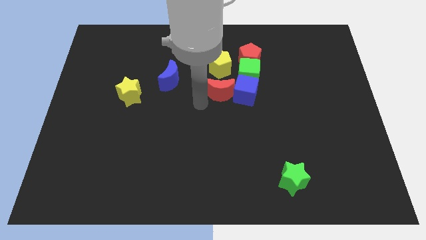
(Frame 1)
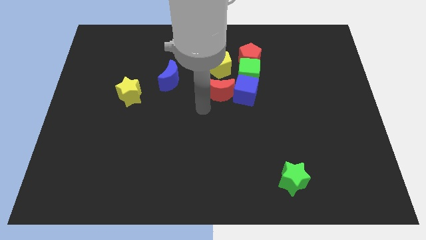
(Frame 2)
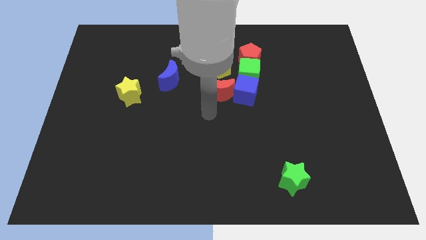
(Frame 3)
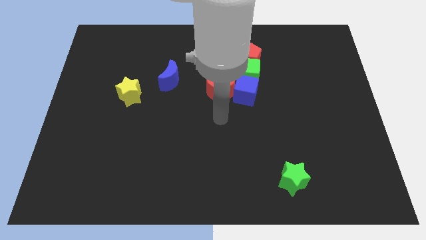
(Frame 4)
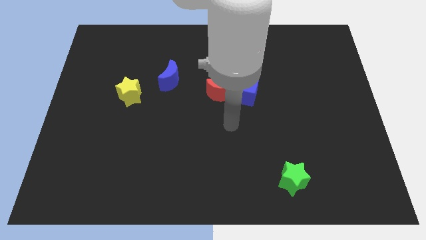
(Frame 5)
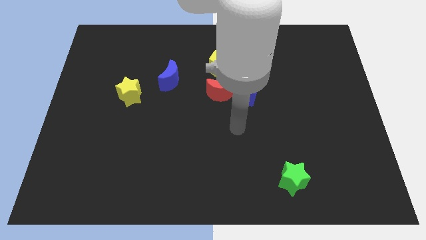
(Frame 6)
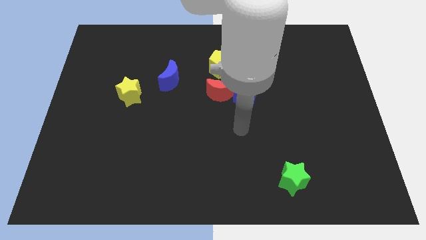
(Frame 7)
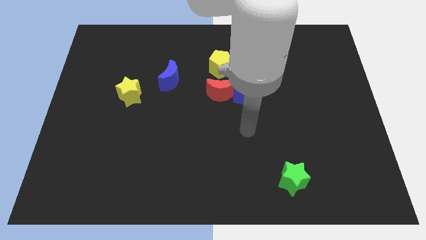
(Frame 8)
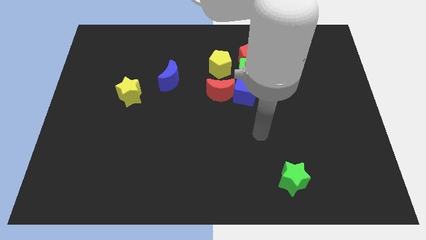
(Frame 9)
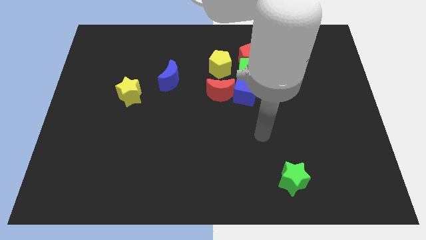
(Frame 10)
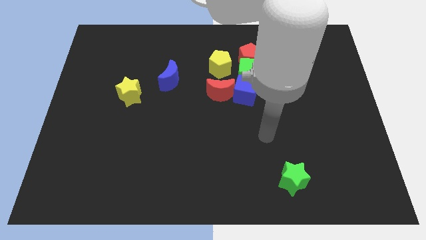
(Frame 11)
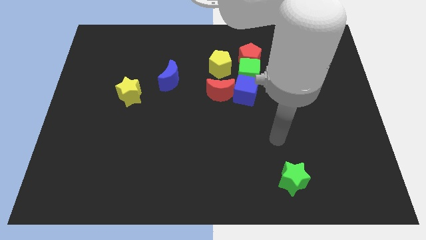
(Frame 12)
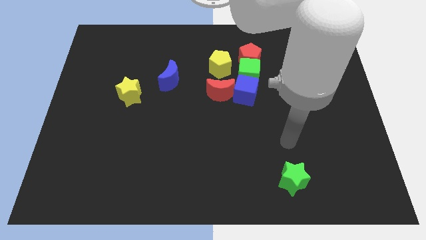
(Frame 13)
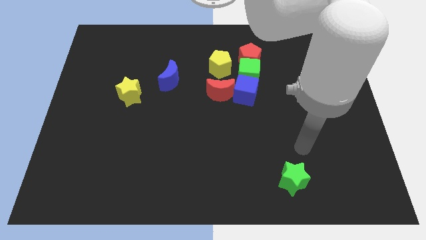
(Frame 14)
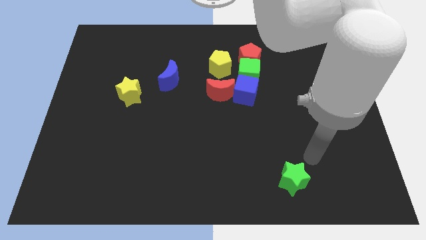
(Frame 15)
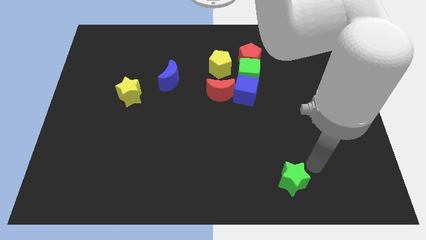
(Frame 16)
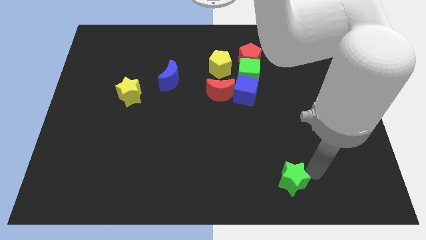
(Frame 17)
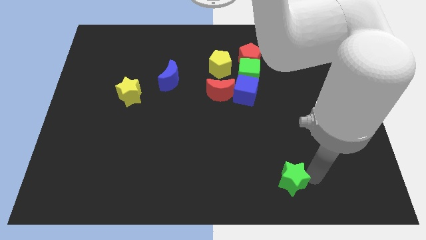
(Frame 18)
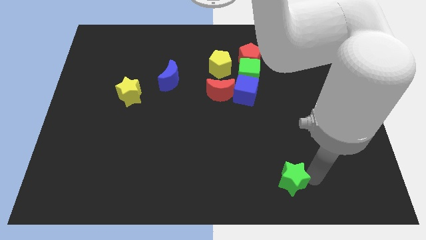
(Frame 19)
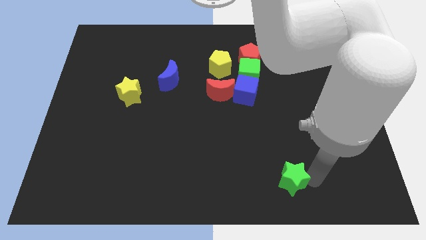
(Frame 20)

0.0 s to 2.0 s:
place the arm to the right of the green star

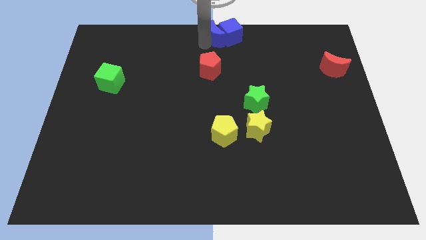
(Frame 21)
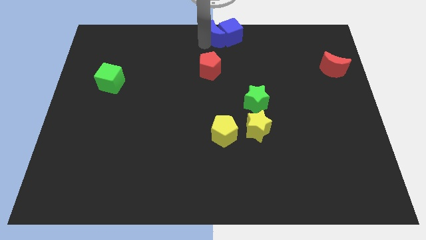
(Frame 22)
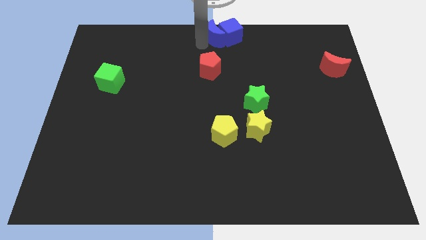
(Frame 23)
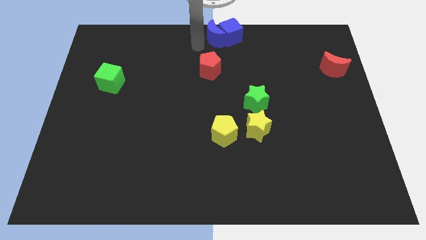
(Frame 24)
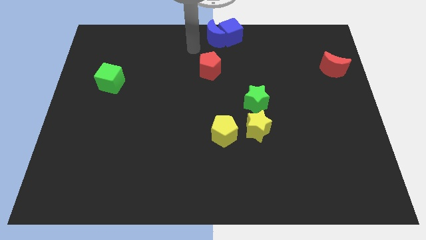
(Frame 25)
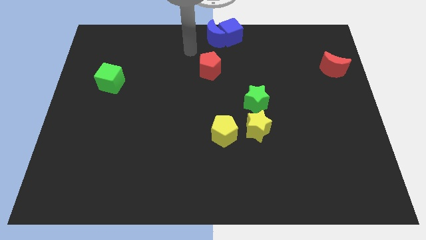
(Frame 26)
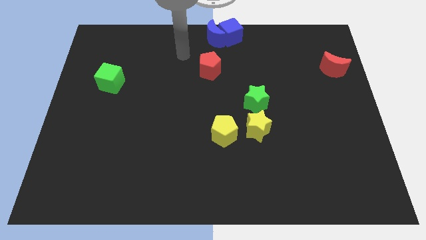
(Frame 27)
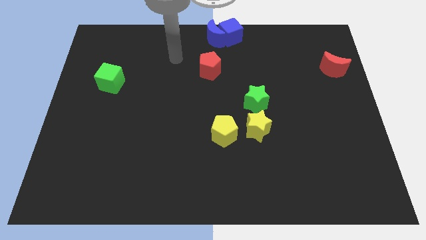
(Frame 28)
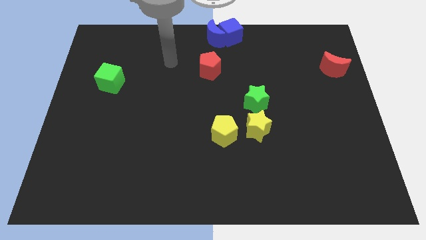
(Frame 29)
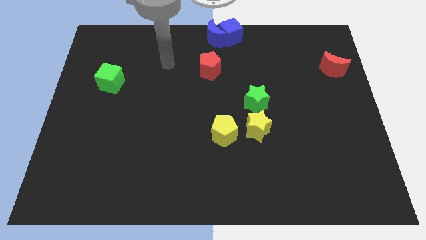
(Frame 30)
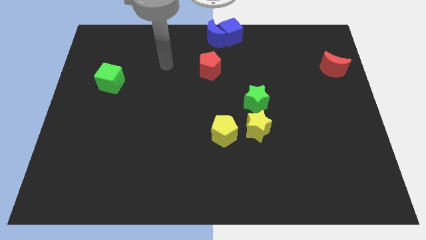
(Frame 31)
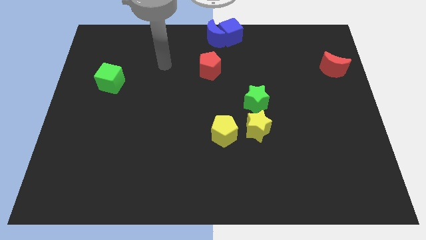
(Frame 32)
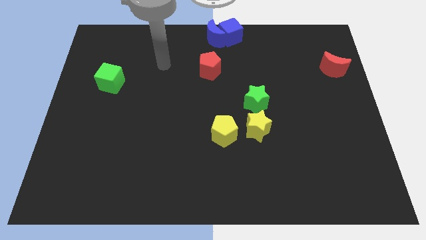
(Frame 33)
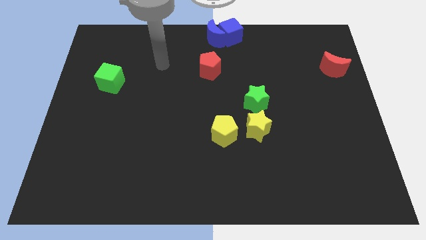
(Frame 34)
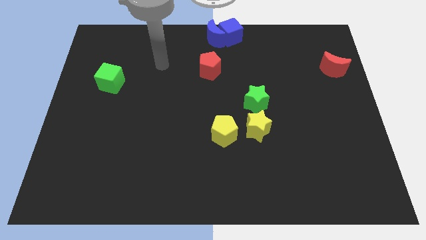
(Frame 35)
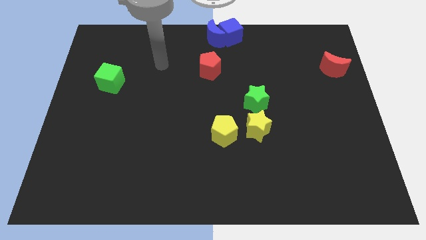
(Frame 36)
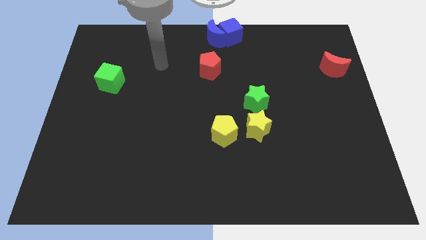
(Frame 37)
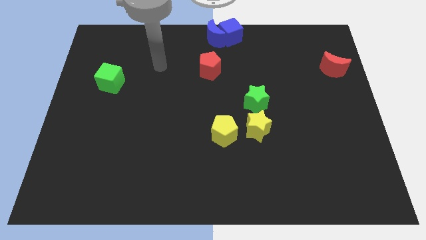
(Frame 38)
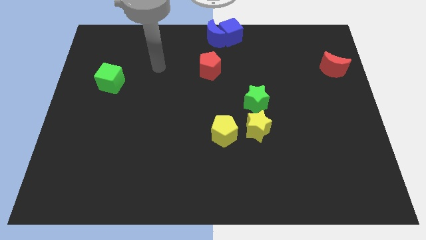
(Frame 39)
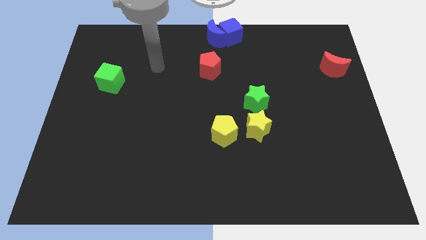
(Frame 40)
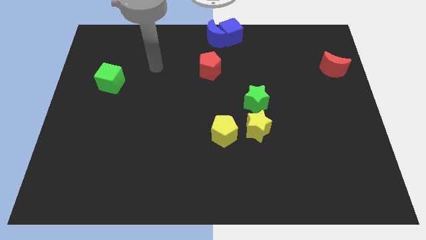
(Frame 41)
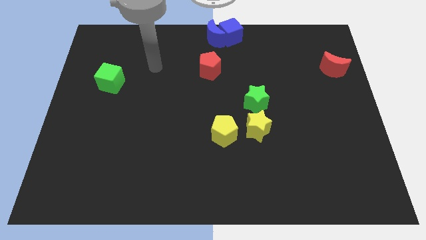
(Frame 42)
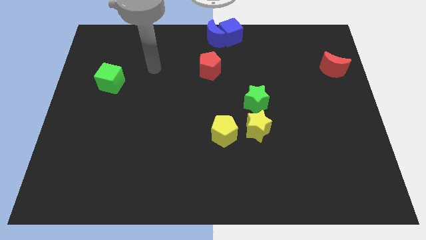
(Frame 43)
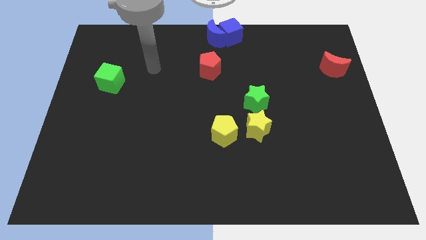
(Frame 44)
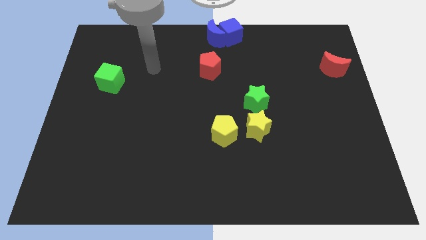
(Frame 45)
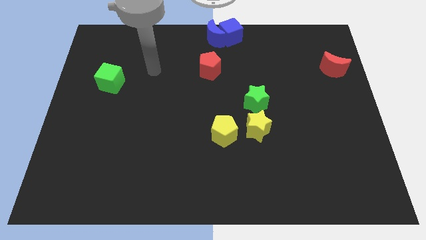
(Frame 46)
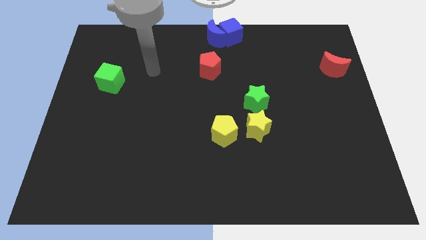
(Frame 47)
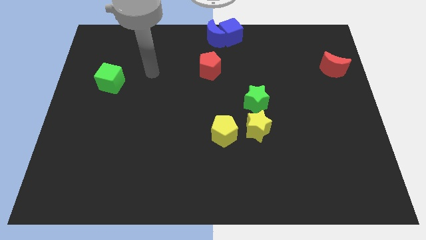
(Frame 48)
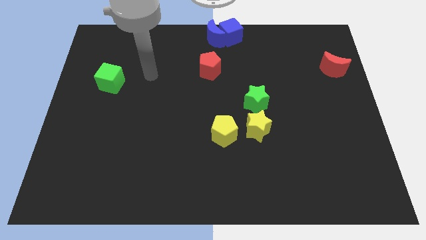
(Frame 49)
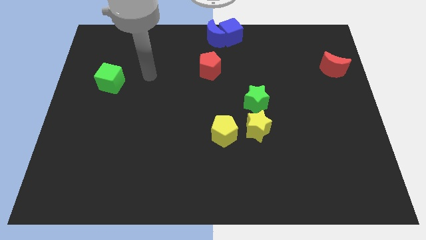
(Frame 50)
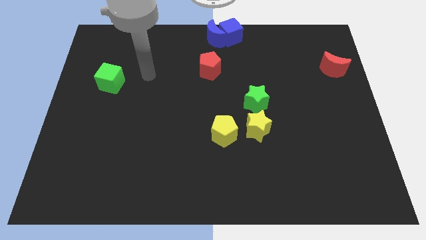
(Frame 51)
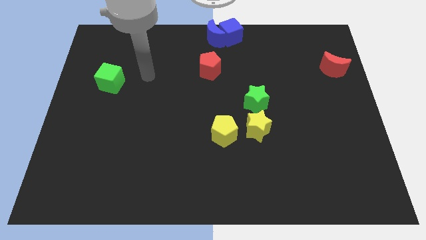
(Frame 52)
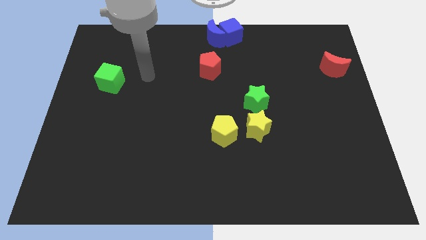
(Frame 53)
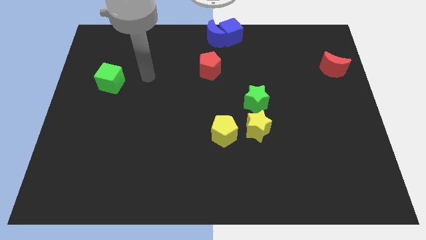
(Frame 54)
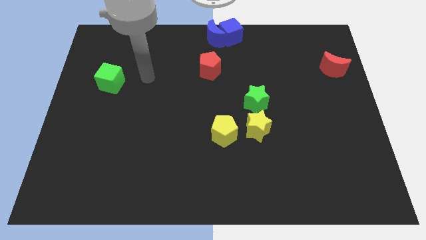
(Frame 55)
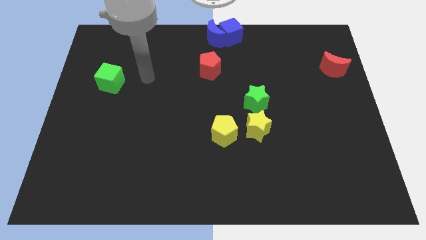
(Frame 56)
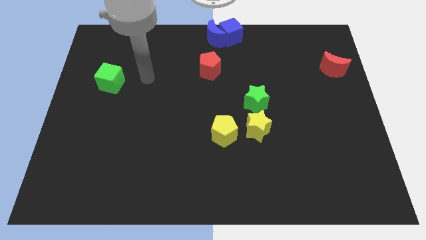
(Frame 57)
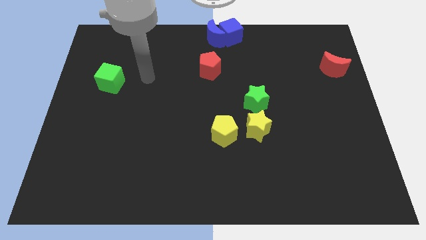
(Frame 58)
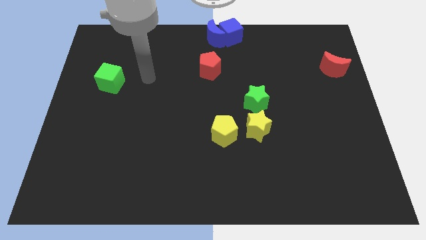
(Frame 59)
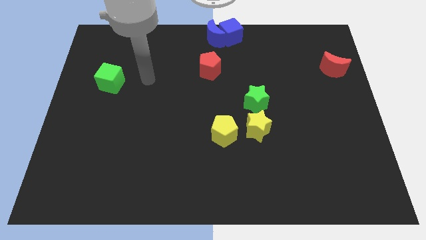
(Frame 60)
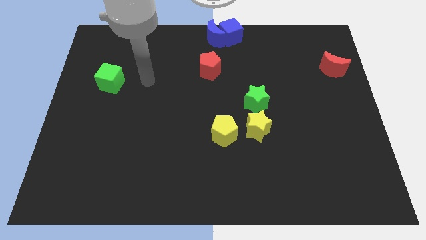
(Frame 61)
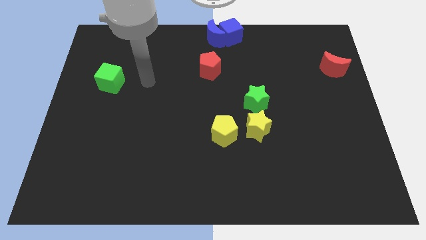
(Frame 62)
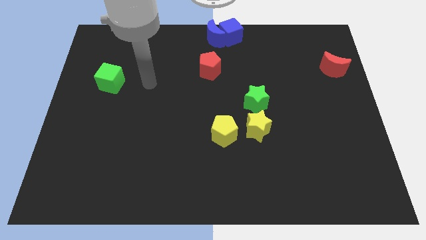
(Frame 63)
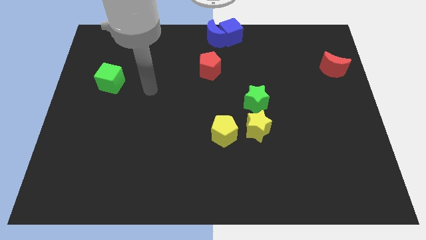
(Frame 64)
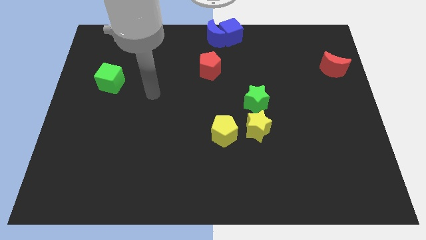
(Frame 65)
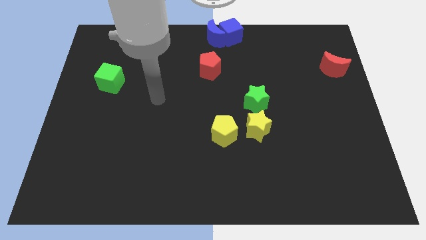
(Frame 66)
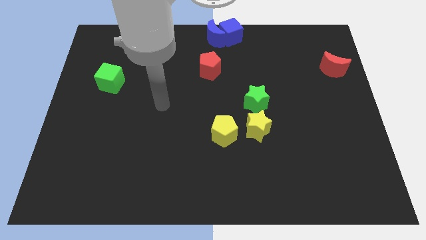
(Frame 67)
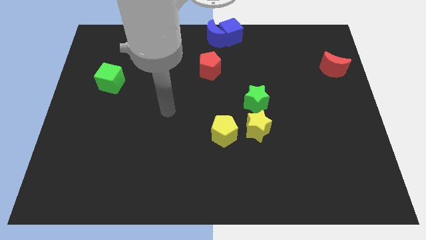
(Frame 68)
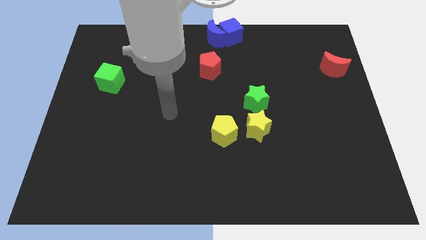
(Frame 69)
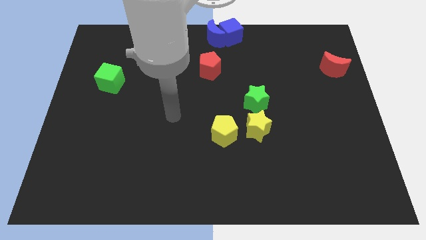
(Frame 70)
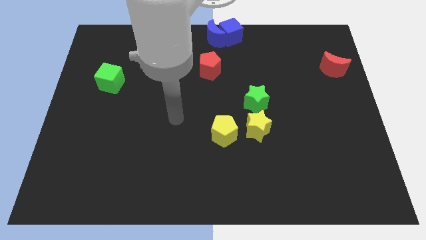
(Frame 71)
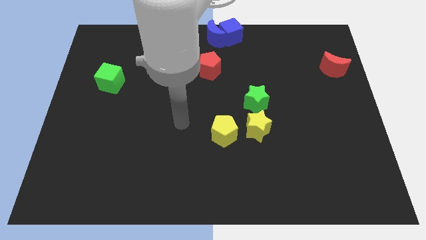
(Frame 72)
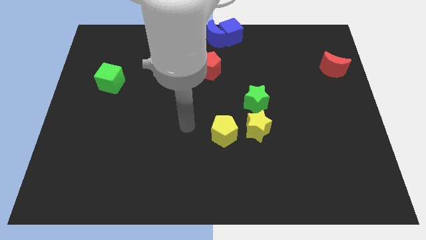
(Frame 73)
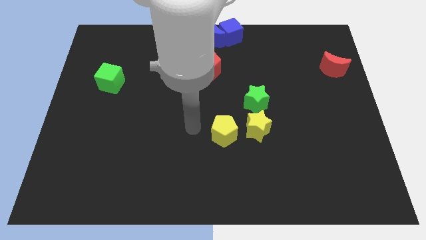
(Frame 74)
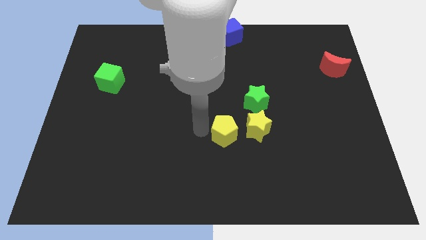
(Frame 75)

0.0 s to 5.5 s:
go to the left side of the yellow pentagon

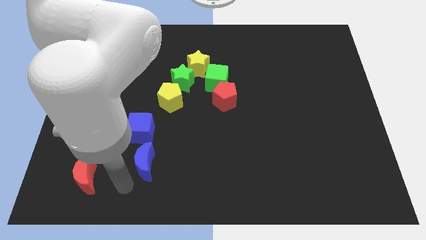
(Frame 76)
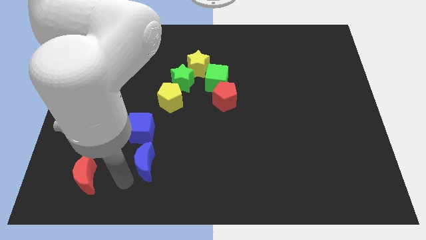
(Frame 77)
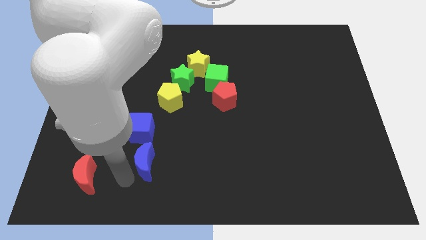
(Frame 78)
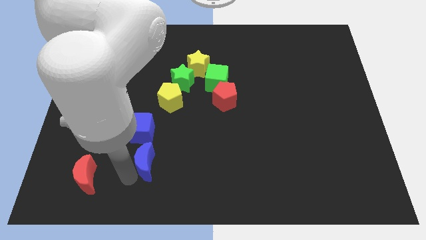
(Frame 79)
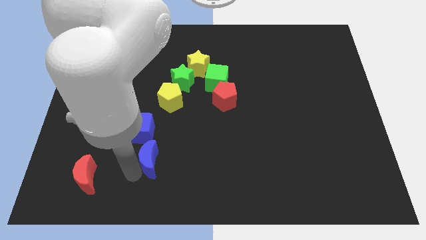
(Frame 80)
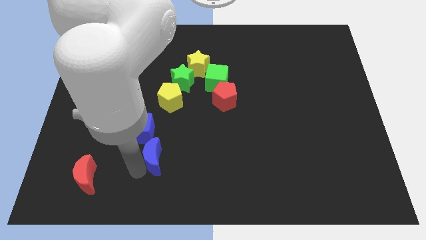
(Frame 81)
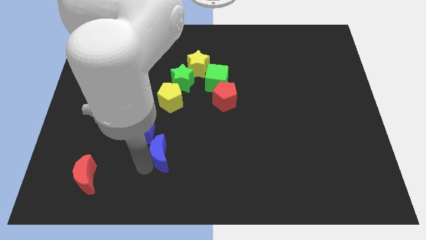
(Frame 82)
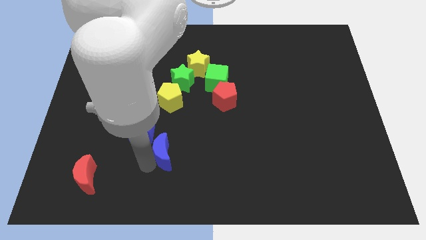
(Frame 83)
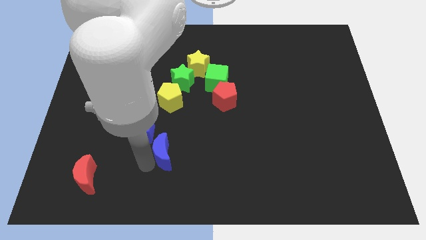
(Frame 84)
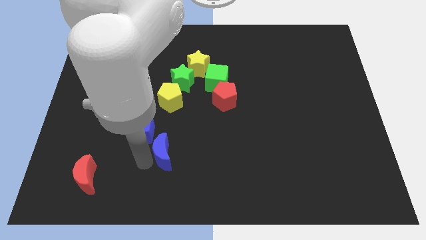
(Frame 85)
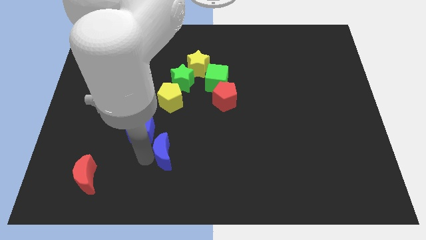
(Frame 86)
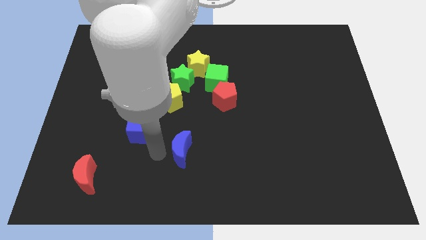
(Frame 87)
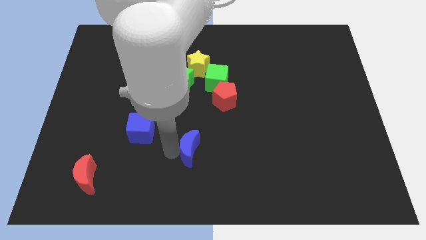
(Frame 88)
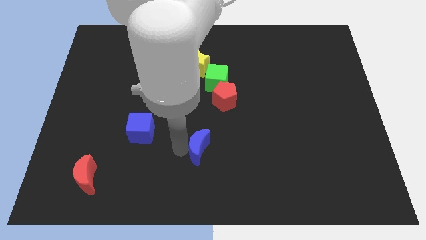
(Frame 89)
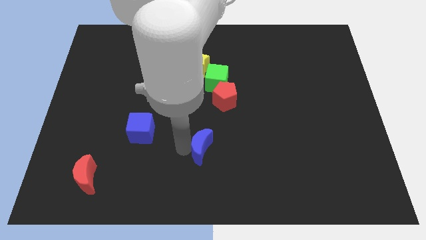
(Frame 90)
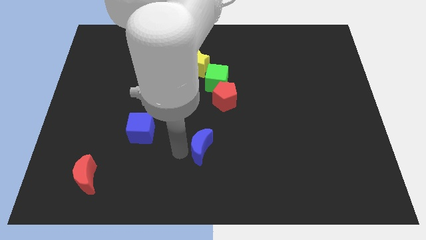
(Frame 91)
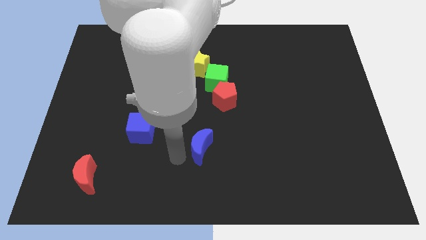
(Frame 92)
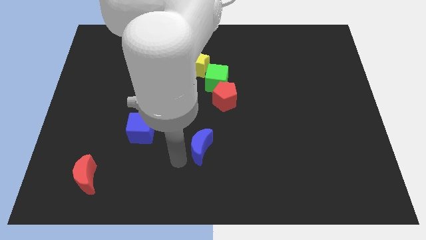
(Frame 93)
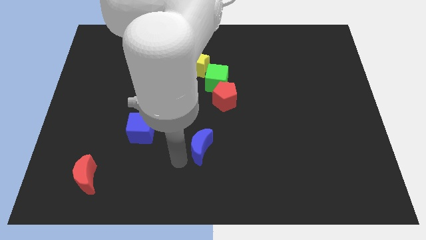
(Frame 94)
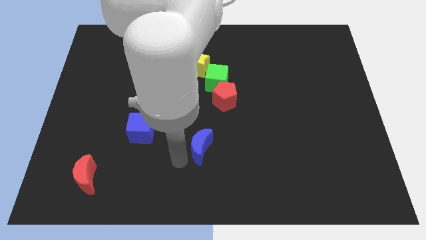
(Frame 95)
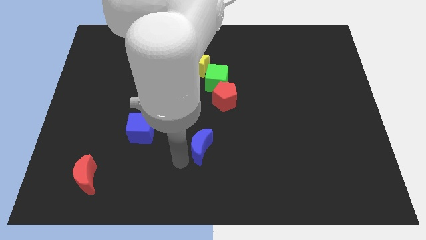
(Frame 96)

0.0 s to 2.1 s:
separate blue moon from blue cube
